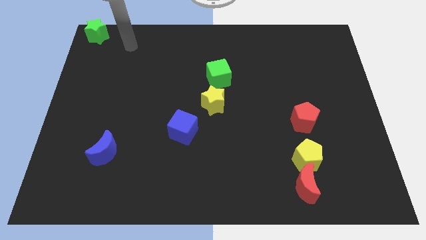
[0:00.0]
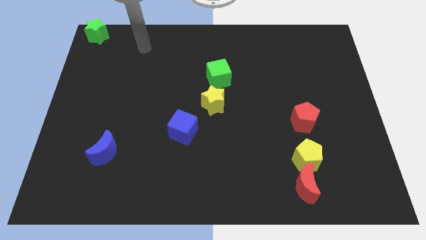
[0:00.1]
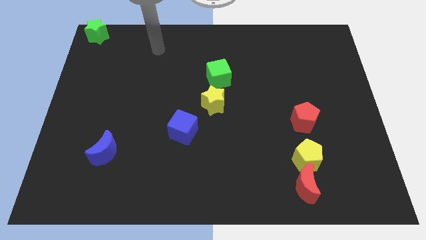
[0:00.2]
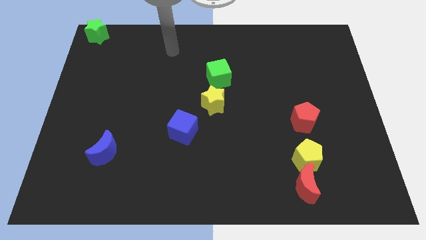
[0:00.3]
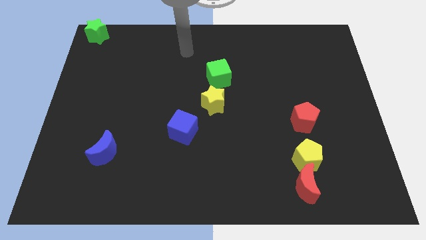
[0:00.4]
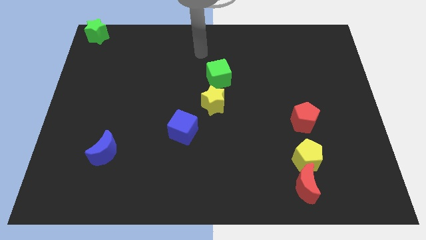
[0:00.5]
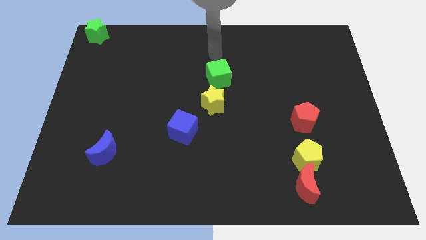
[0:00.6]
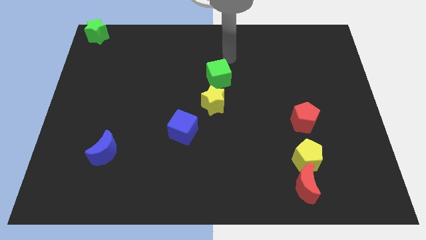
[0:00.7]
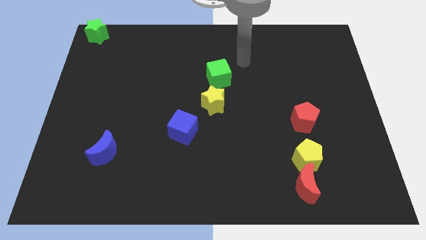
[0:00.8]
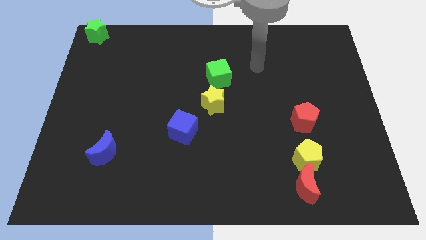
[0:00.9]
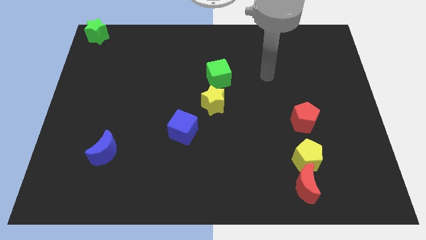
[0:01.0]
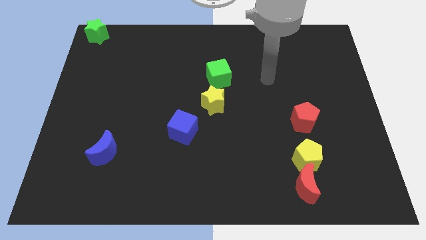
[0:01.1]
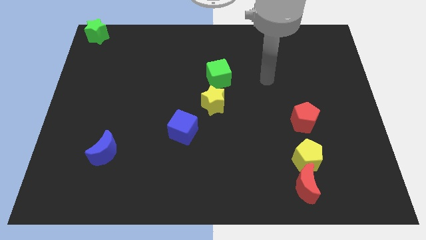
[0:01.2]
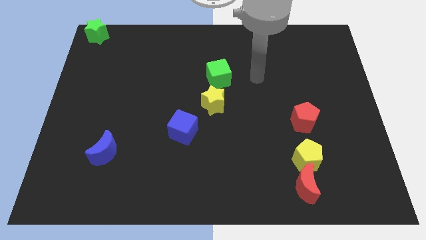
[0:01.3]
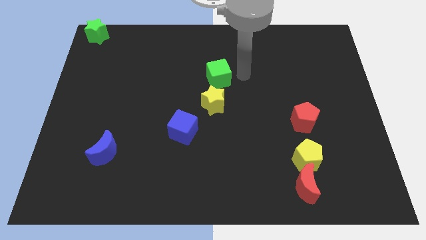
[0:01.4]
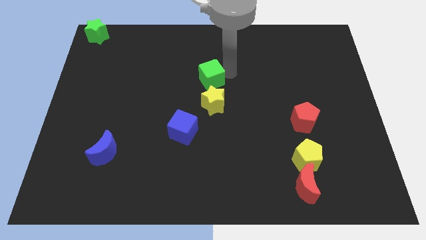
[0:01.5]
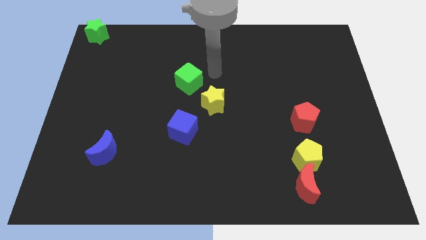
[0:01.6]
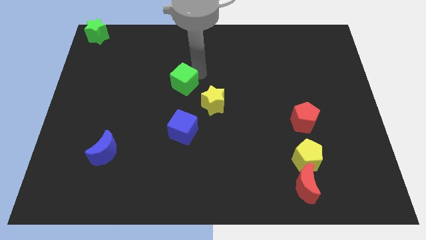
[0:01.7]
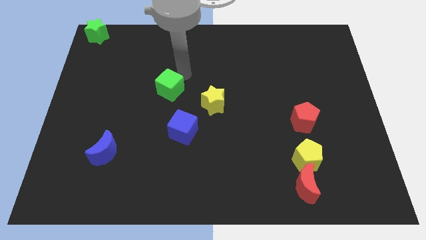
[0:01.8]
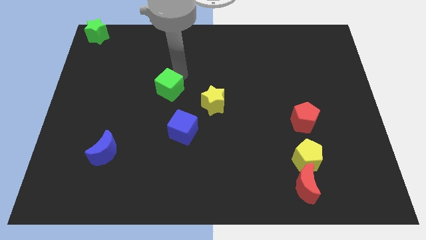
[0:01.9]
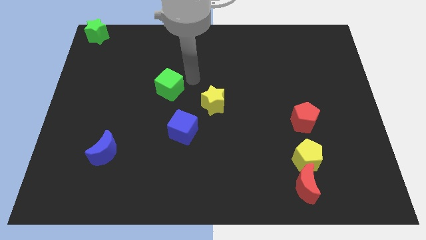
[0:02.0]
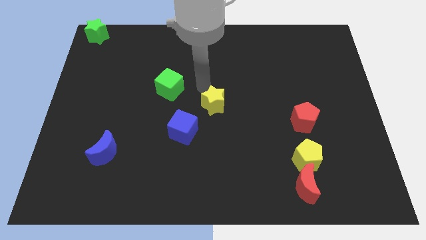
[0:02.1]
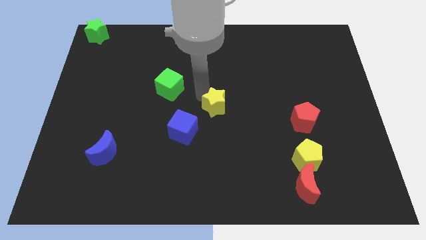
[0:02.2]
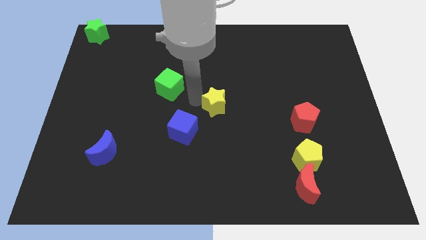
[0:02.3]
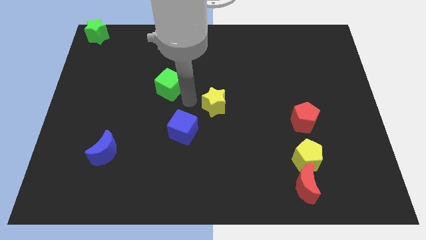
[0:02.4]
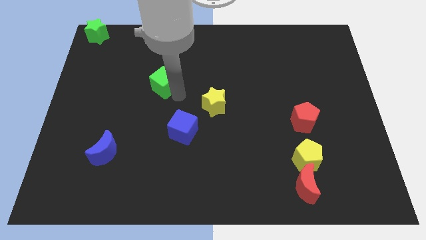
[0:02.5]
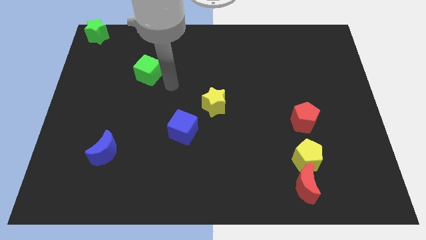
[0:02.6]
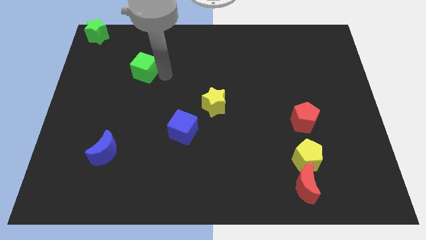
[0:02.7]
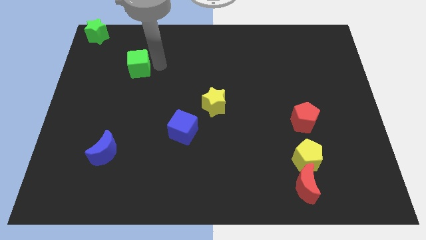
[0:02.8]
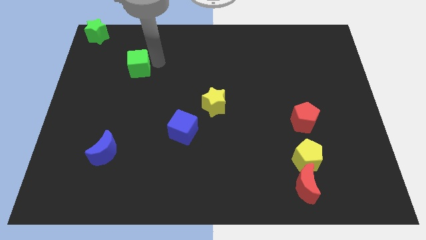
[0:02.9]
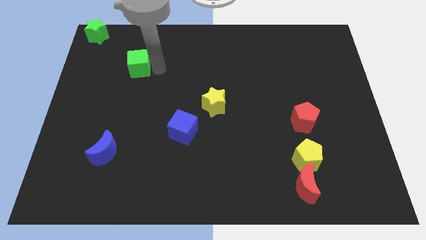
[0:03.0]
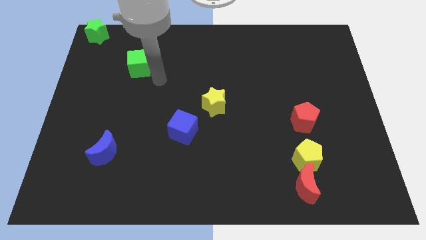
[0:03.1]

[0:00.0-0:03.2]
push the green cube towards the green star

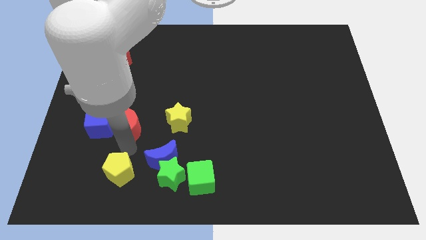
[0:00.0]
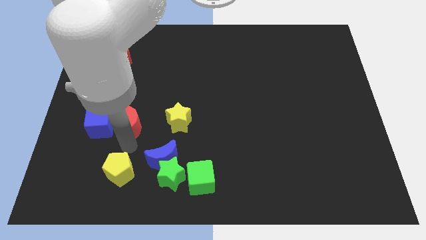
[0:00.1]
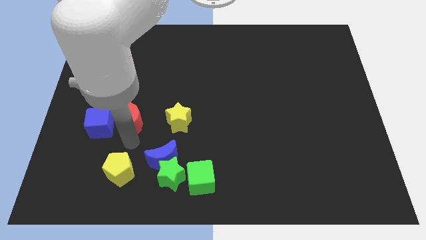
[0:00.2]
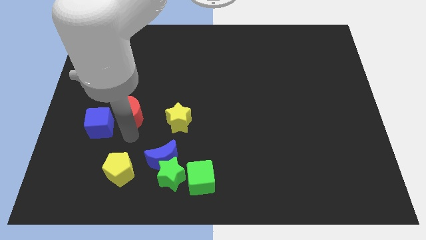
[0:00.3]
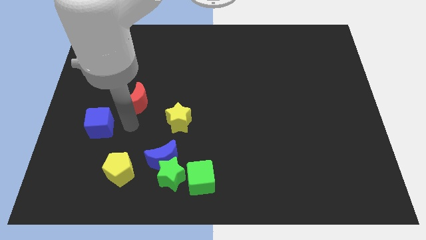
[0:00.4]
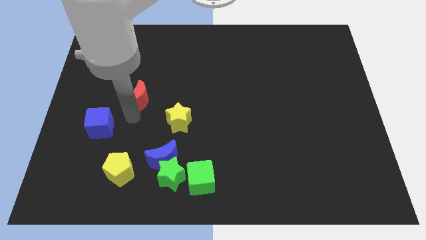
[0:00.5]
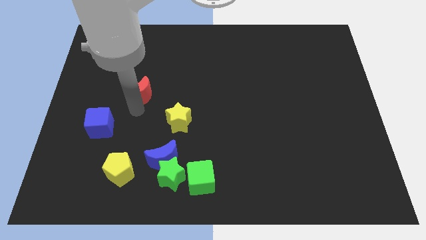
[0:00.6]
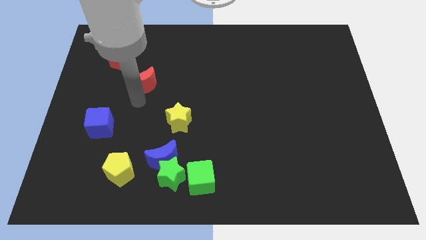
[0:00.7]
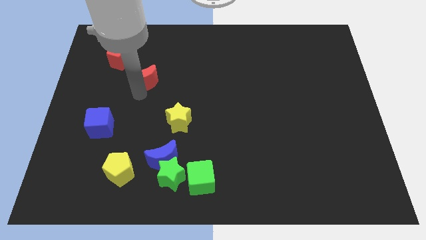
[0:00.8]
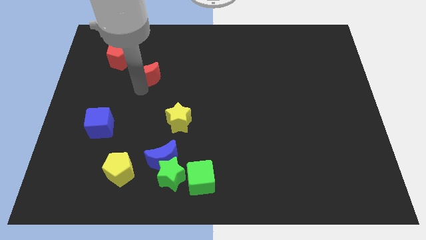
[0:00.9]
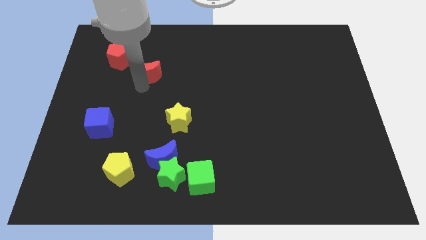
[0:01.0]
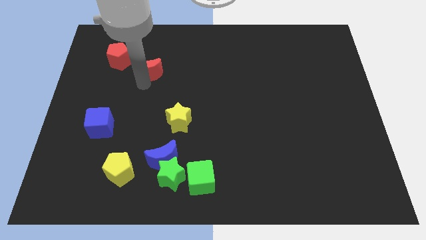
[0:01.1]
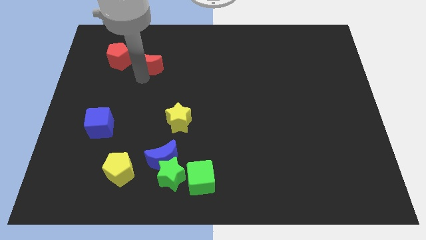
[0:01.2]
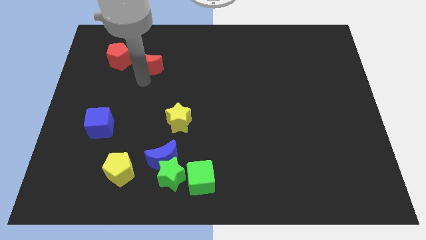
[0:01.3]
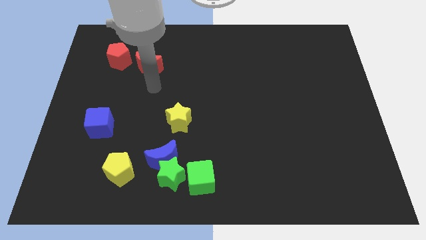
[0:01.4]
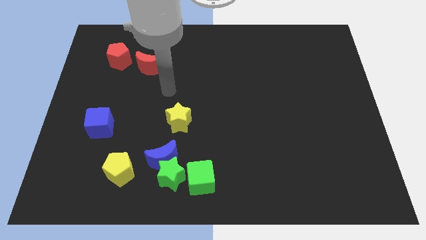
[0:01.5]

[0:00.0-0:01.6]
move the red crescent right beside the red pentagon

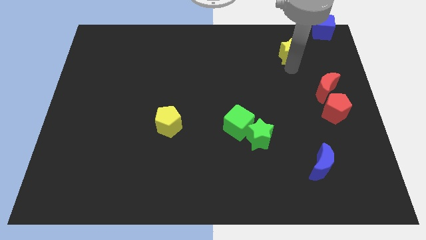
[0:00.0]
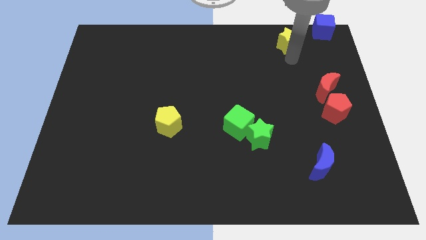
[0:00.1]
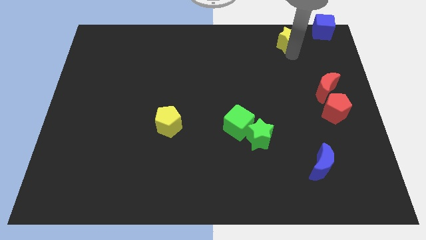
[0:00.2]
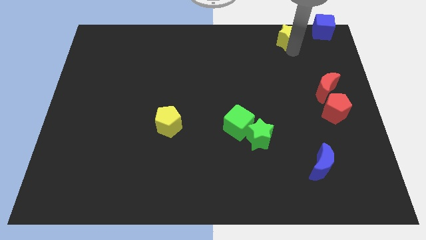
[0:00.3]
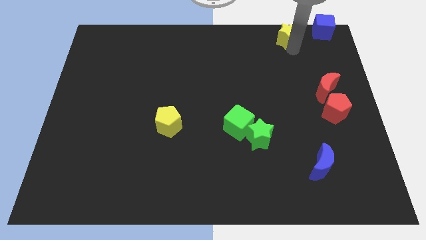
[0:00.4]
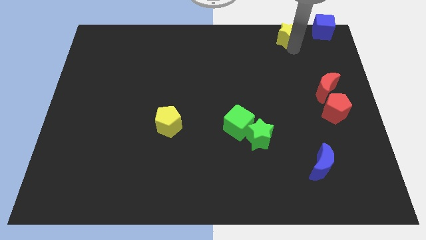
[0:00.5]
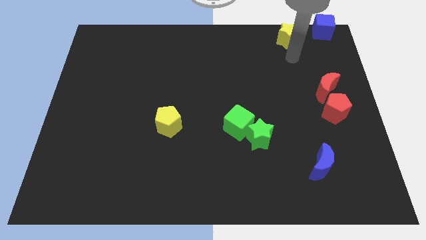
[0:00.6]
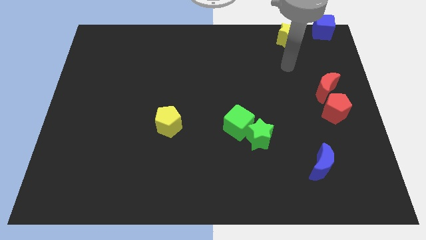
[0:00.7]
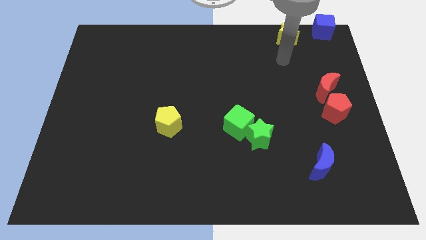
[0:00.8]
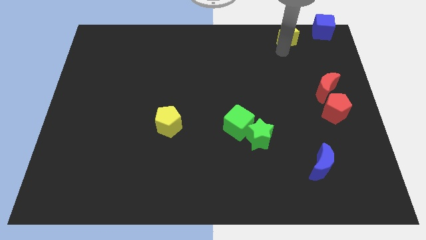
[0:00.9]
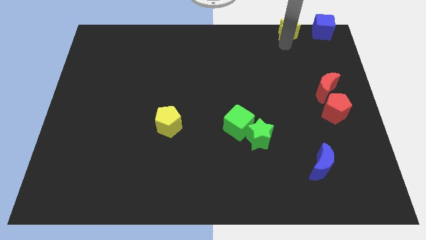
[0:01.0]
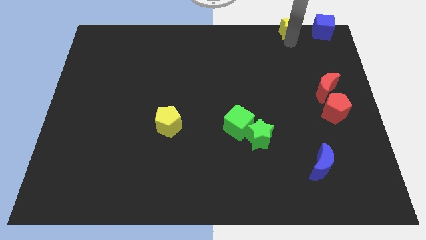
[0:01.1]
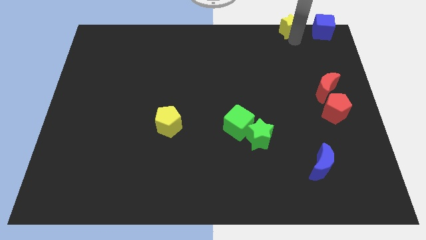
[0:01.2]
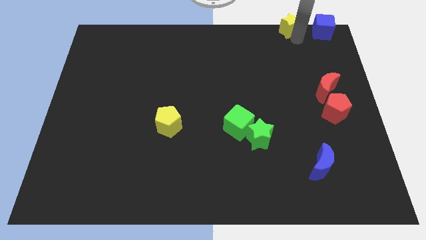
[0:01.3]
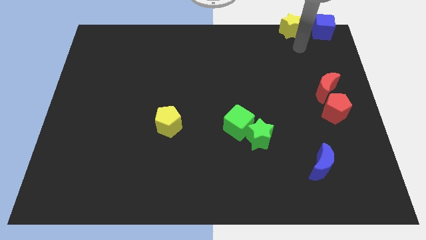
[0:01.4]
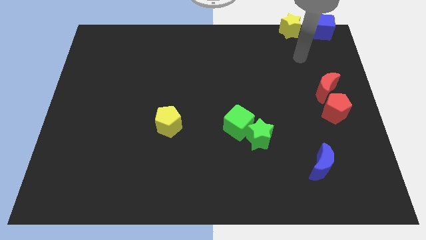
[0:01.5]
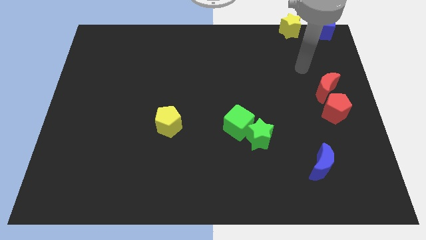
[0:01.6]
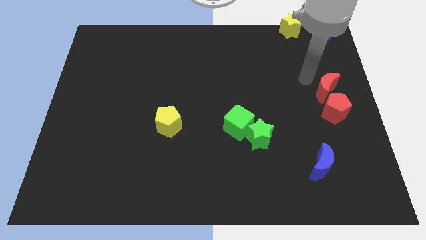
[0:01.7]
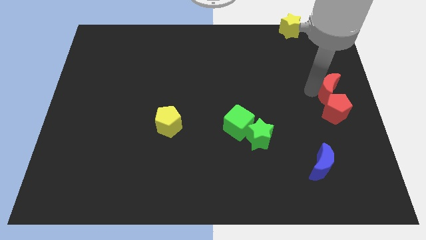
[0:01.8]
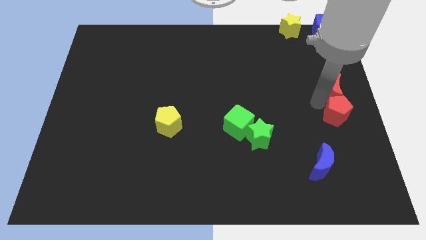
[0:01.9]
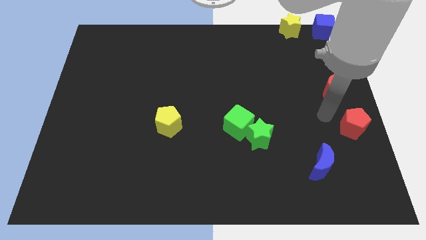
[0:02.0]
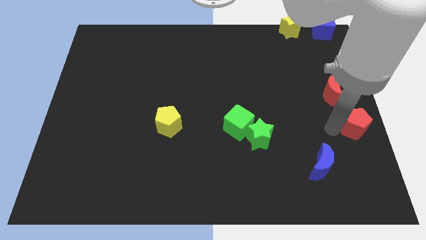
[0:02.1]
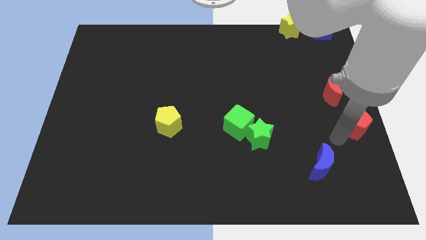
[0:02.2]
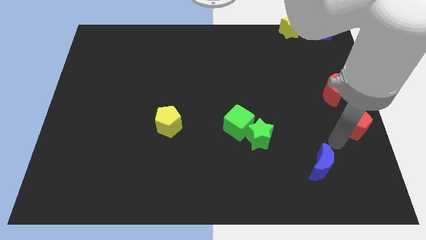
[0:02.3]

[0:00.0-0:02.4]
move yellow star left beside the blue cube

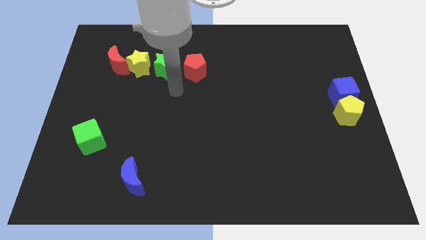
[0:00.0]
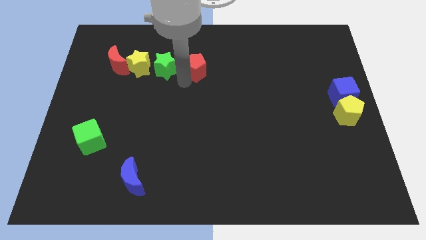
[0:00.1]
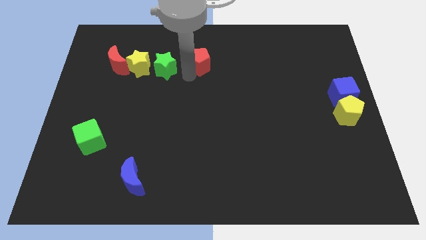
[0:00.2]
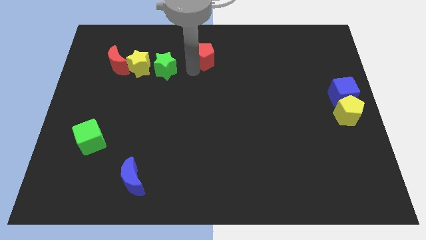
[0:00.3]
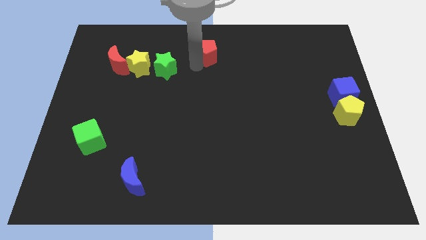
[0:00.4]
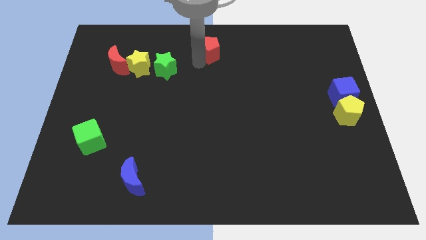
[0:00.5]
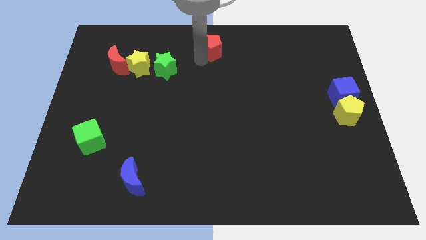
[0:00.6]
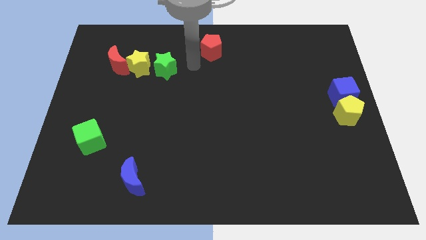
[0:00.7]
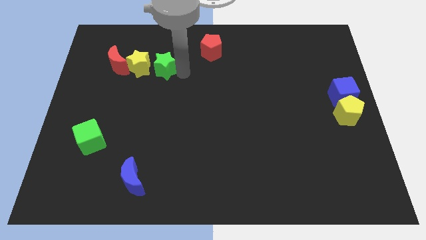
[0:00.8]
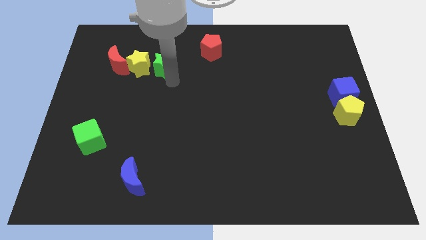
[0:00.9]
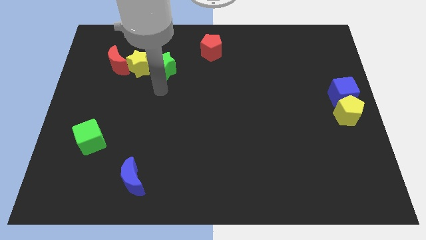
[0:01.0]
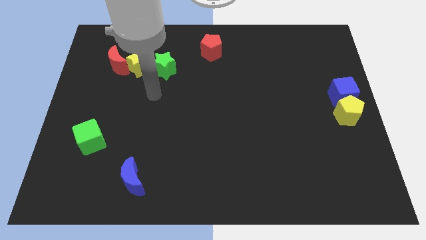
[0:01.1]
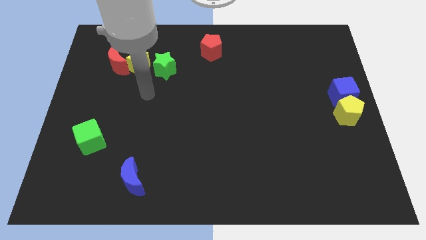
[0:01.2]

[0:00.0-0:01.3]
move the red pentagon towards the top center of the board

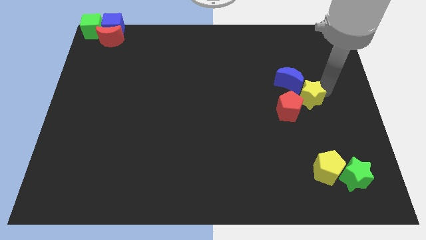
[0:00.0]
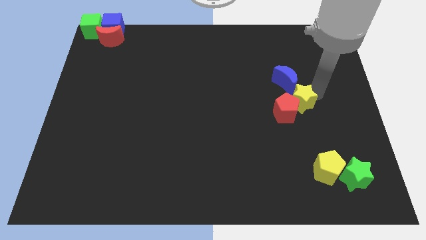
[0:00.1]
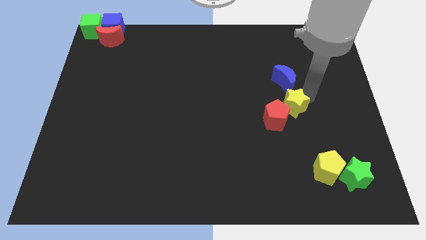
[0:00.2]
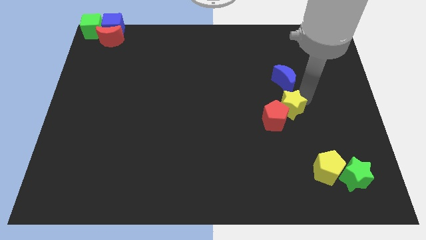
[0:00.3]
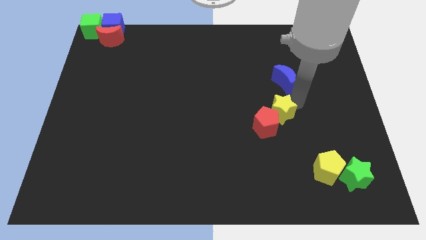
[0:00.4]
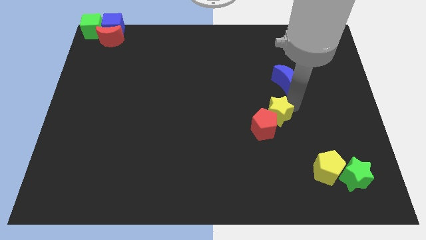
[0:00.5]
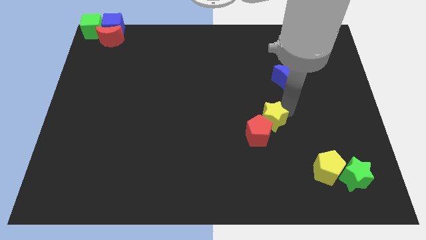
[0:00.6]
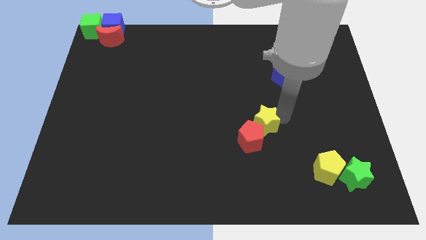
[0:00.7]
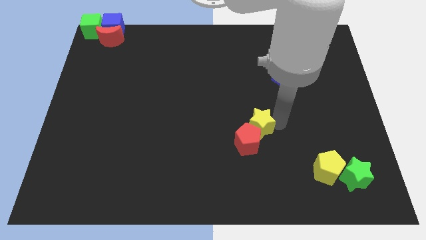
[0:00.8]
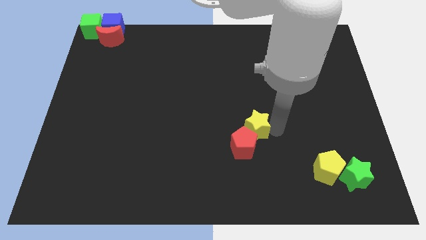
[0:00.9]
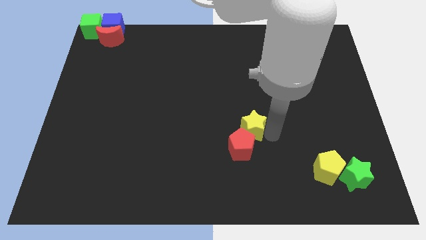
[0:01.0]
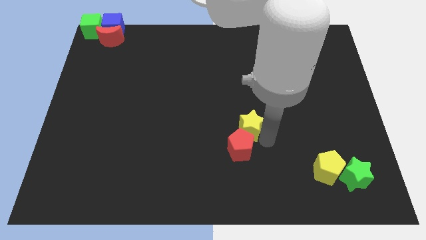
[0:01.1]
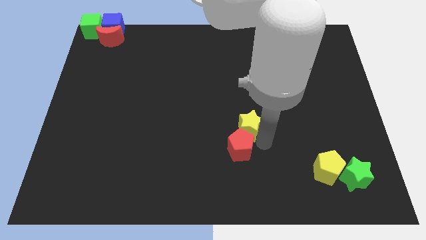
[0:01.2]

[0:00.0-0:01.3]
drag the yellow star to the left
